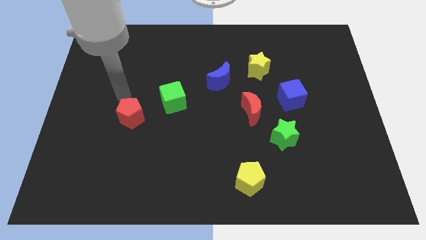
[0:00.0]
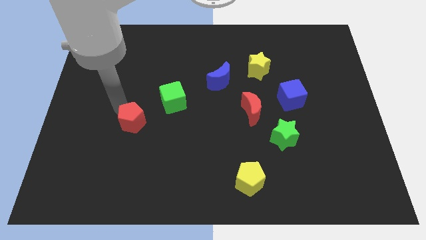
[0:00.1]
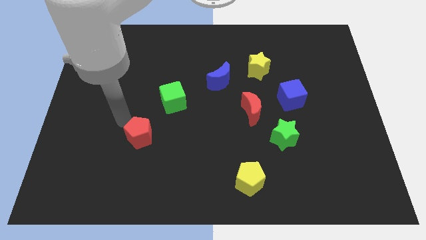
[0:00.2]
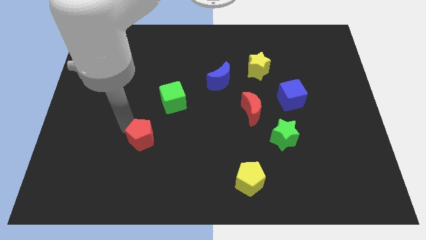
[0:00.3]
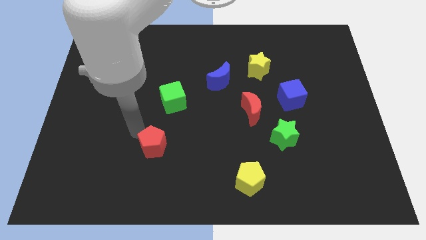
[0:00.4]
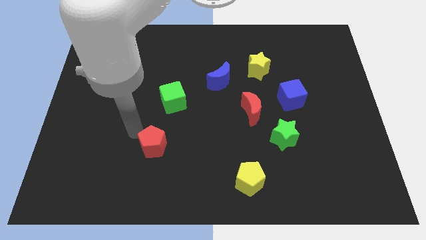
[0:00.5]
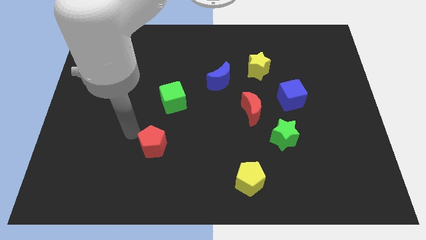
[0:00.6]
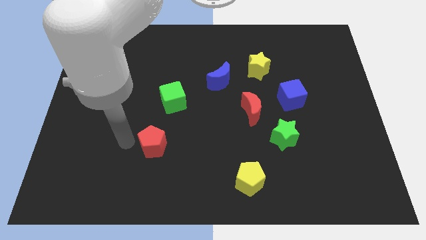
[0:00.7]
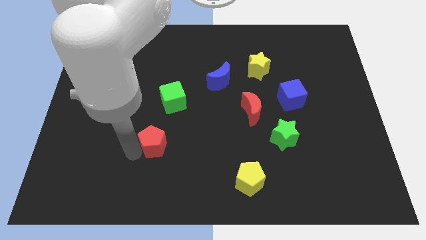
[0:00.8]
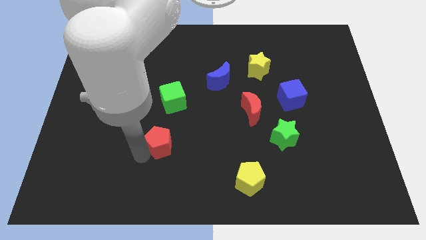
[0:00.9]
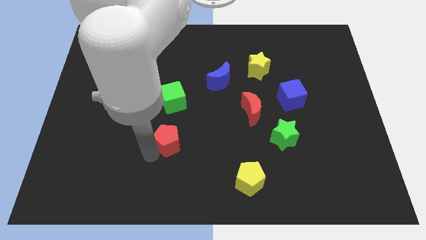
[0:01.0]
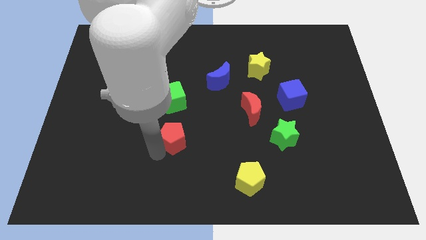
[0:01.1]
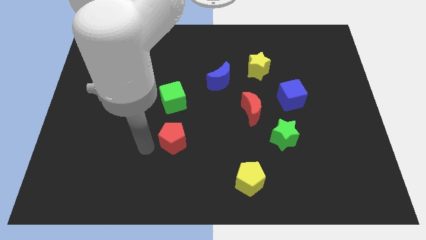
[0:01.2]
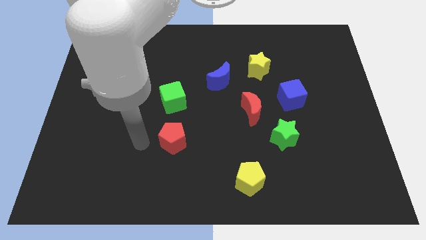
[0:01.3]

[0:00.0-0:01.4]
place red pentagon to the bottom of green cube

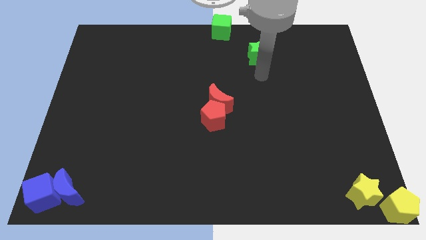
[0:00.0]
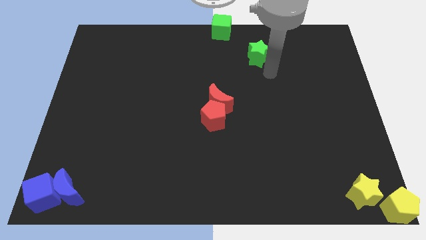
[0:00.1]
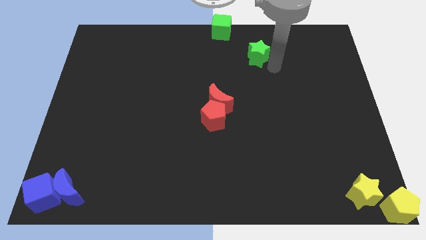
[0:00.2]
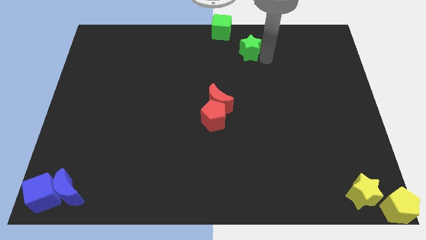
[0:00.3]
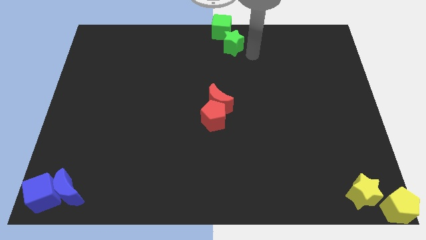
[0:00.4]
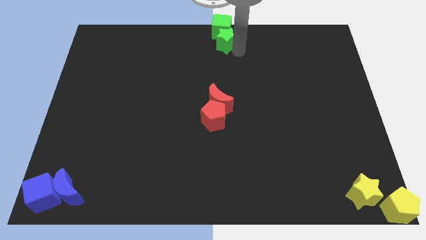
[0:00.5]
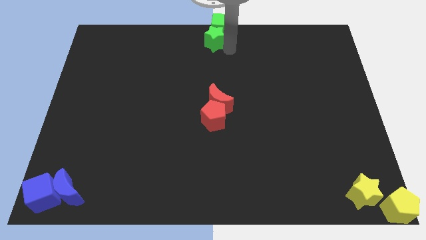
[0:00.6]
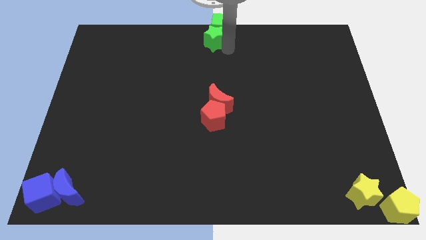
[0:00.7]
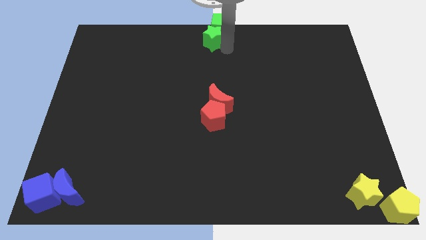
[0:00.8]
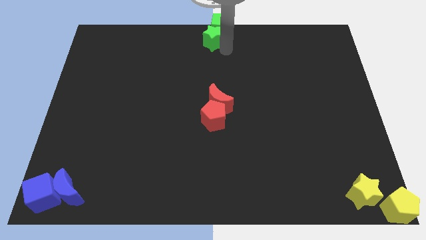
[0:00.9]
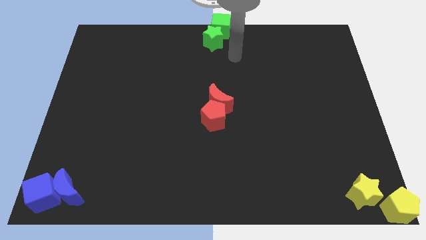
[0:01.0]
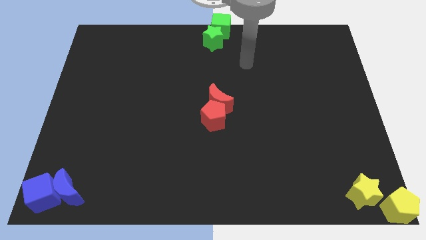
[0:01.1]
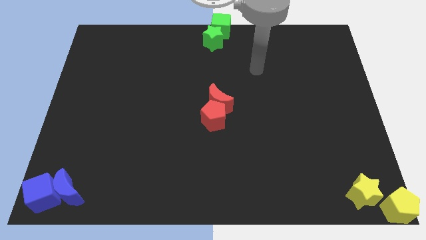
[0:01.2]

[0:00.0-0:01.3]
move the green star to the bottom of the green cube

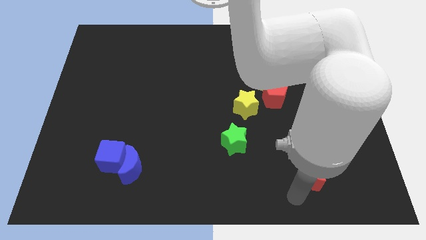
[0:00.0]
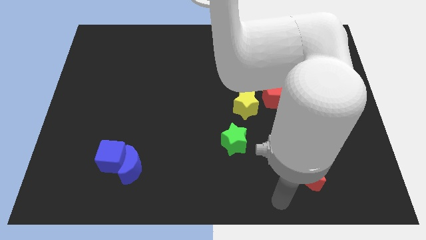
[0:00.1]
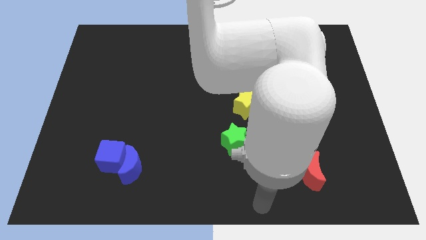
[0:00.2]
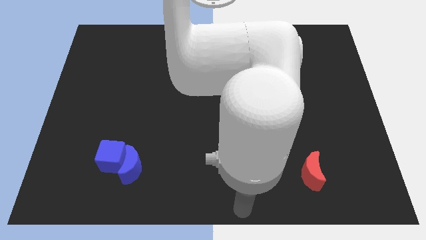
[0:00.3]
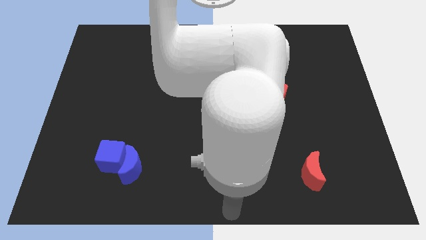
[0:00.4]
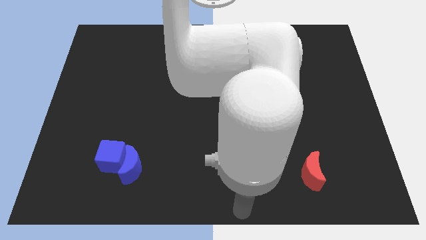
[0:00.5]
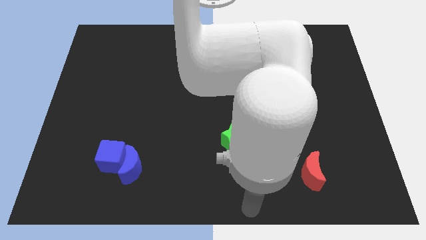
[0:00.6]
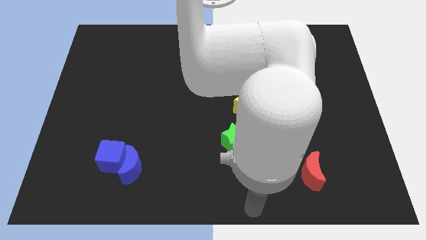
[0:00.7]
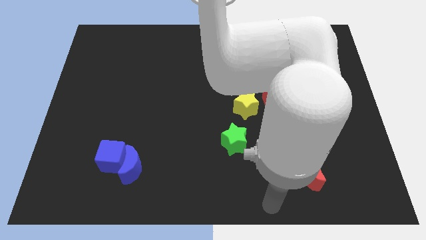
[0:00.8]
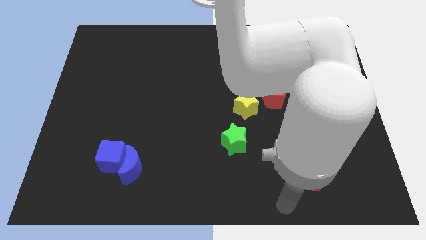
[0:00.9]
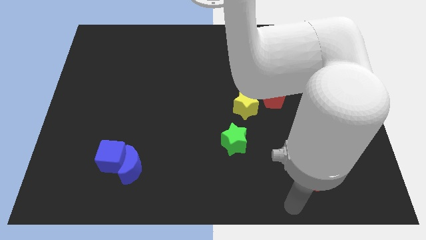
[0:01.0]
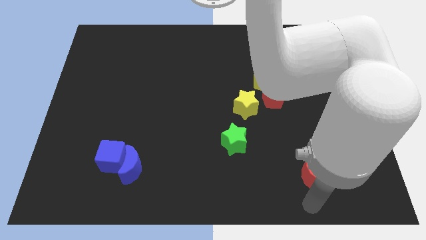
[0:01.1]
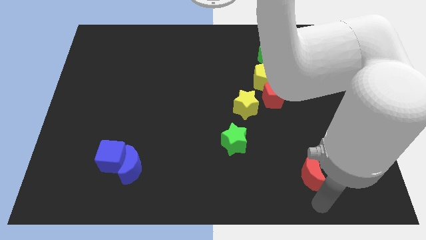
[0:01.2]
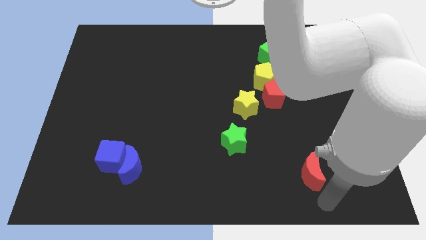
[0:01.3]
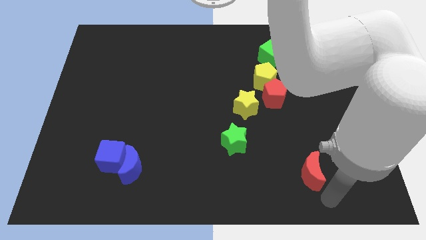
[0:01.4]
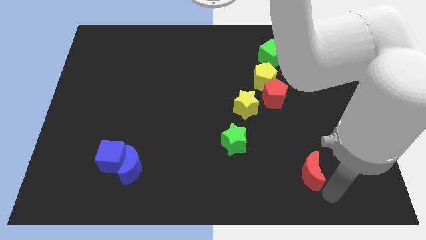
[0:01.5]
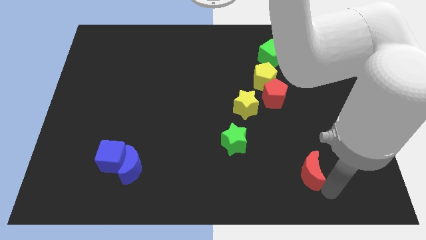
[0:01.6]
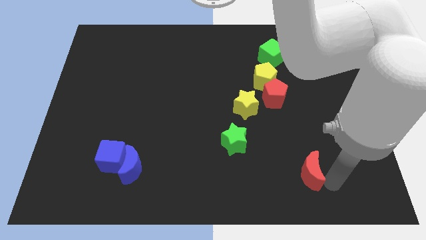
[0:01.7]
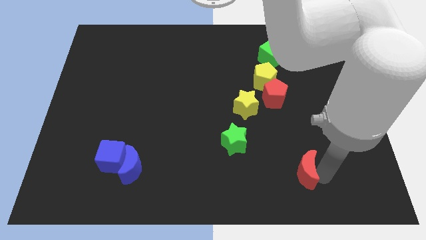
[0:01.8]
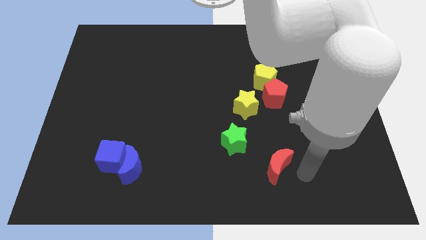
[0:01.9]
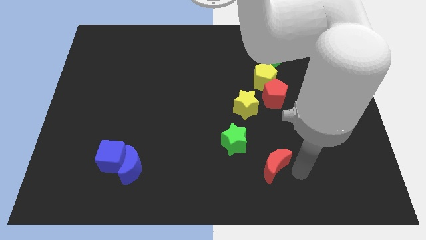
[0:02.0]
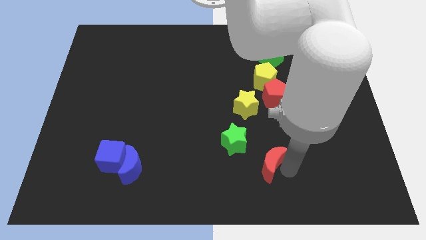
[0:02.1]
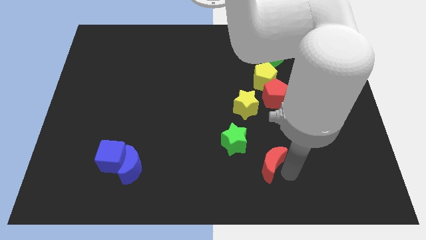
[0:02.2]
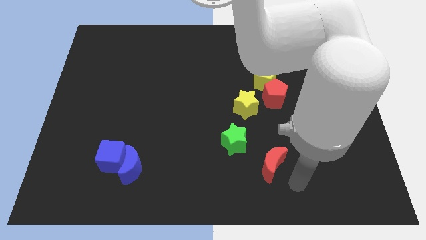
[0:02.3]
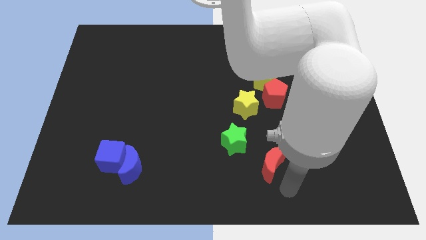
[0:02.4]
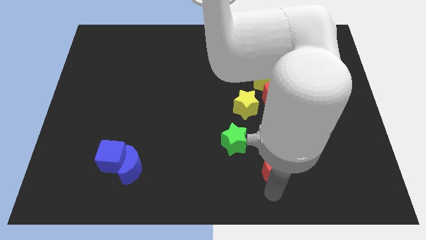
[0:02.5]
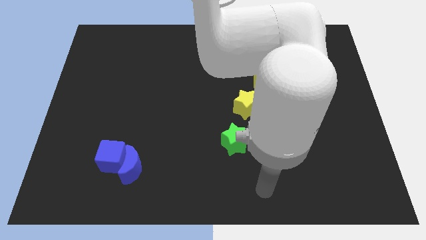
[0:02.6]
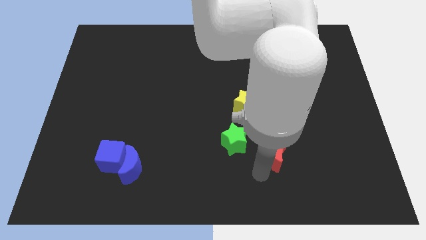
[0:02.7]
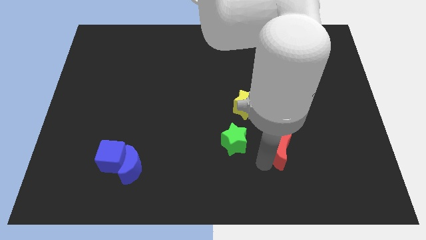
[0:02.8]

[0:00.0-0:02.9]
push red crescent below red pentagon

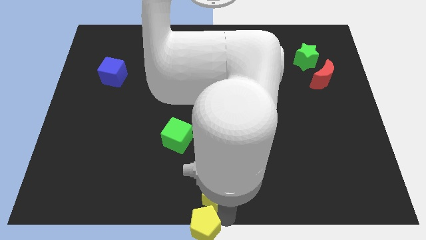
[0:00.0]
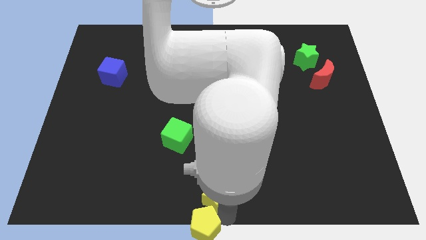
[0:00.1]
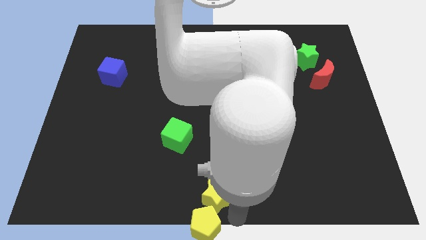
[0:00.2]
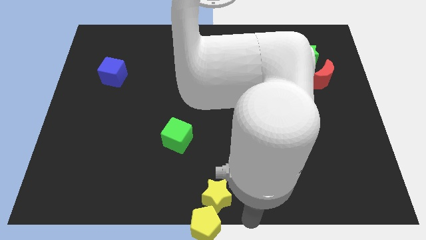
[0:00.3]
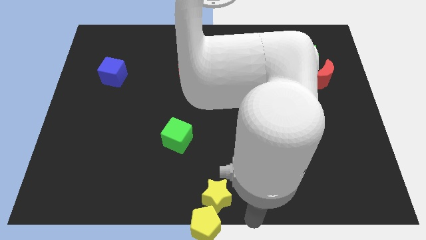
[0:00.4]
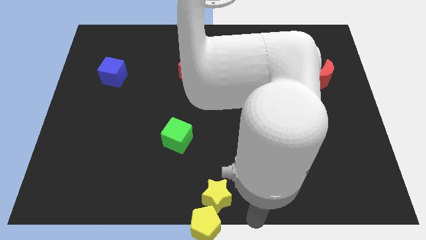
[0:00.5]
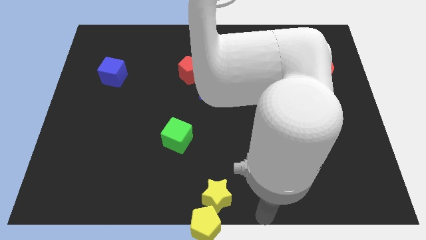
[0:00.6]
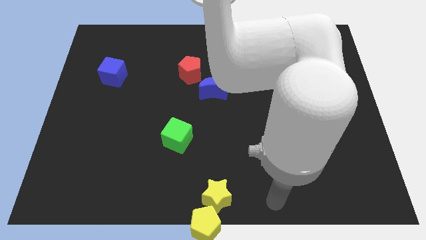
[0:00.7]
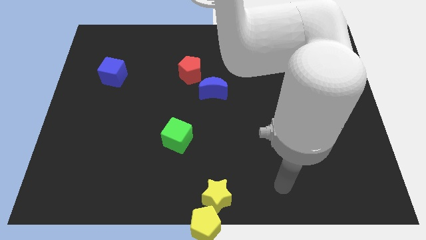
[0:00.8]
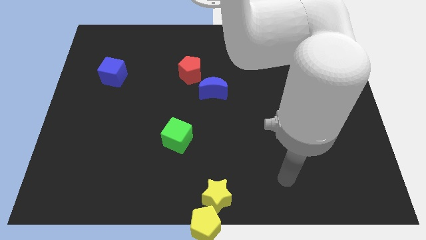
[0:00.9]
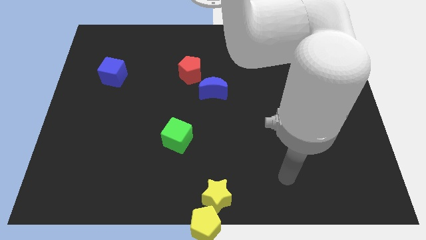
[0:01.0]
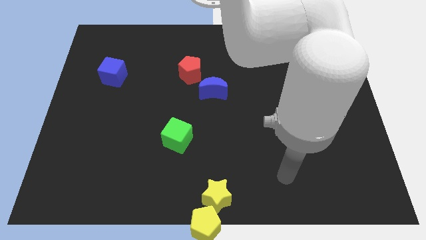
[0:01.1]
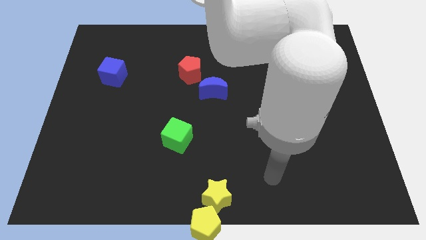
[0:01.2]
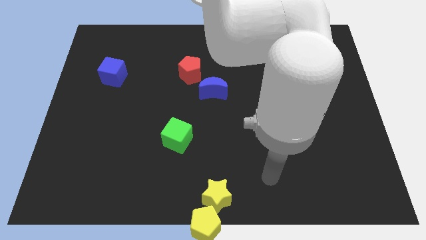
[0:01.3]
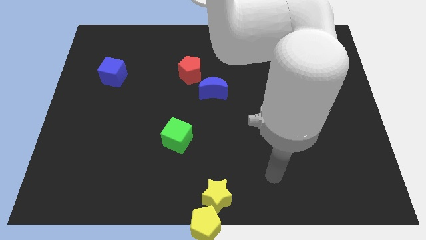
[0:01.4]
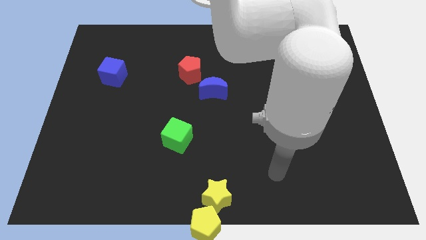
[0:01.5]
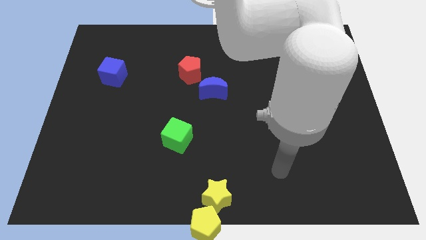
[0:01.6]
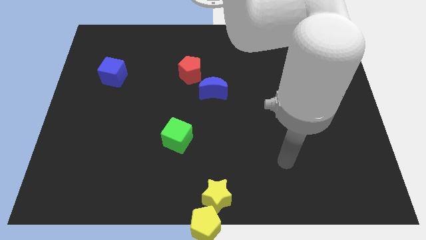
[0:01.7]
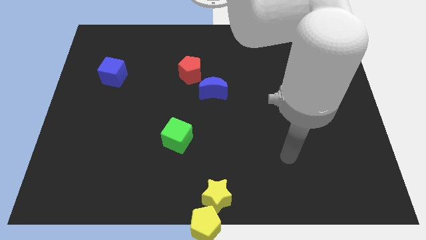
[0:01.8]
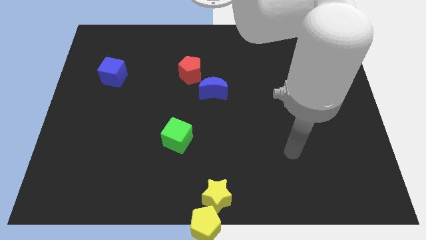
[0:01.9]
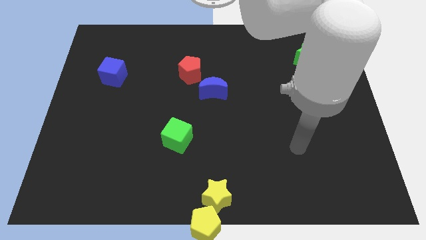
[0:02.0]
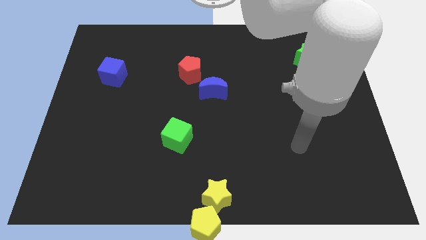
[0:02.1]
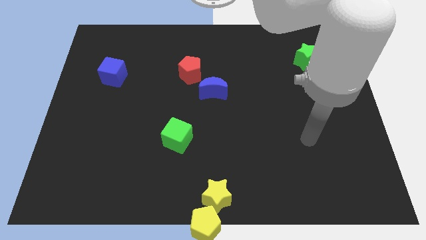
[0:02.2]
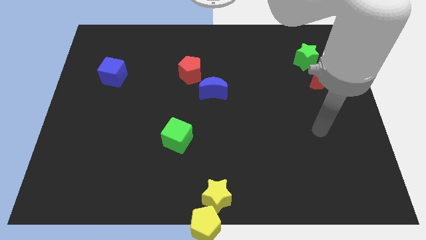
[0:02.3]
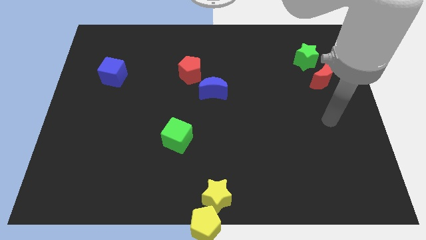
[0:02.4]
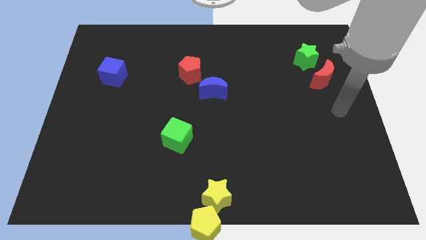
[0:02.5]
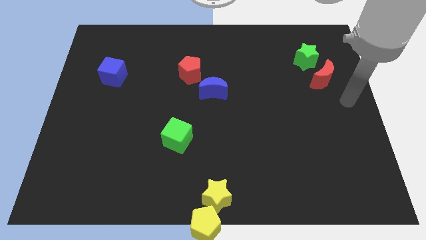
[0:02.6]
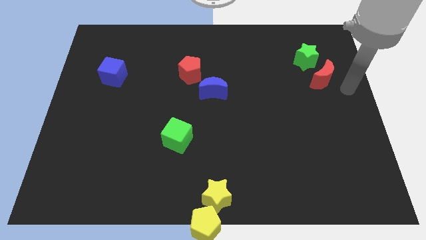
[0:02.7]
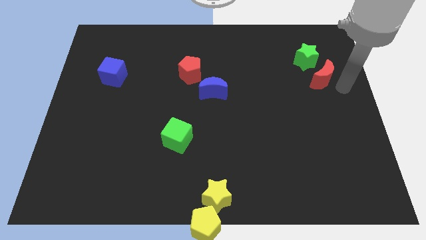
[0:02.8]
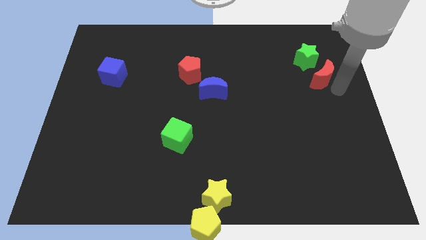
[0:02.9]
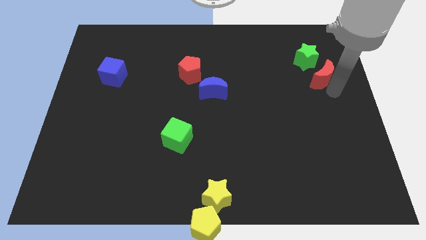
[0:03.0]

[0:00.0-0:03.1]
move your arm away from yellow pentagon

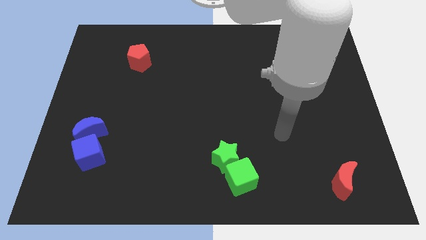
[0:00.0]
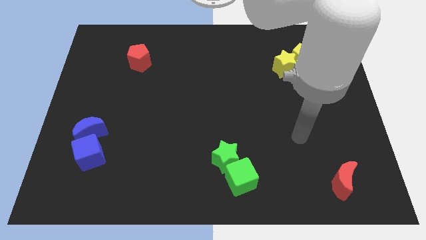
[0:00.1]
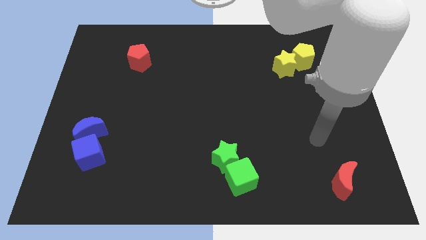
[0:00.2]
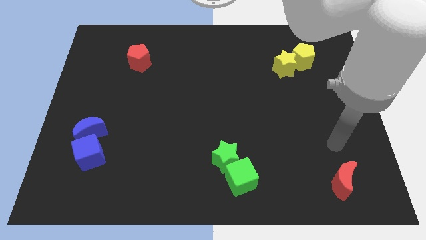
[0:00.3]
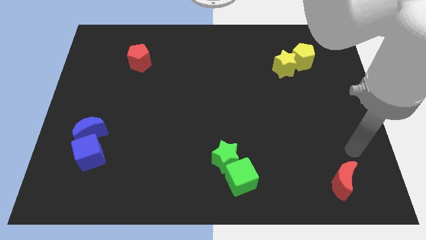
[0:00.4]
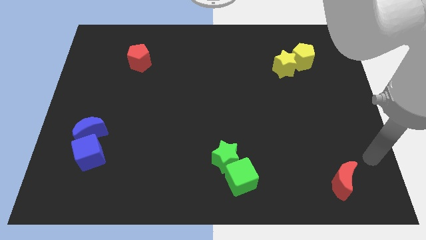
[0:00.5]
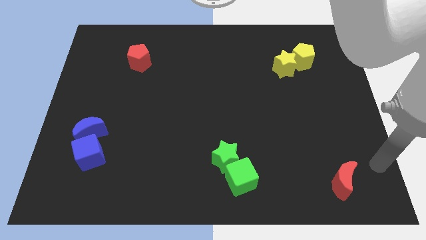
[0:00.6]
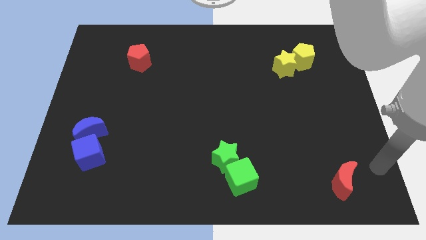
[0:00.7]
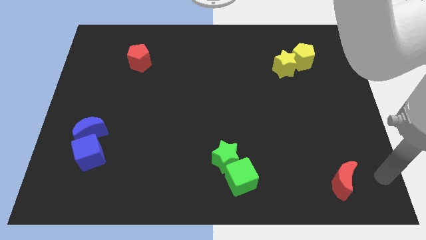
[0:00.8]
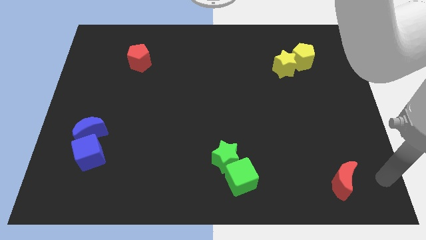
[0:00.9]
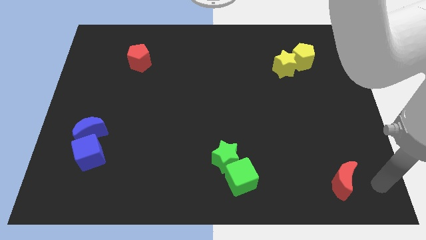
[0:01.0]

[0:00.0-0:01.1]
slide your hand to the right bottom
